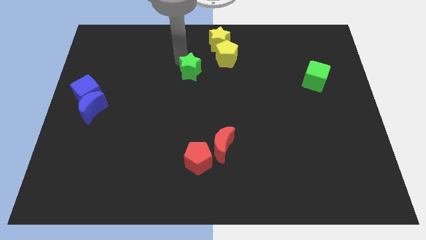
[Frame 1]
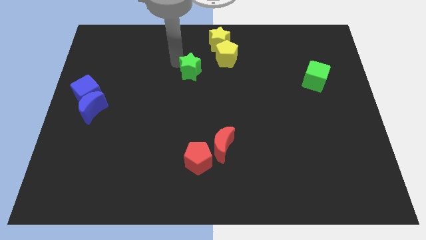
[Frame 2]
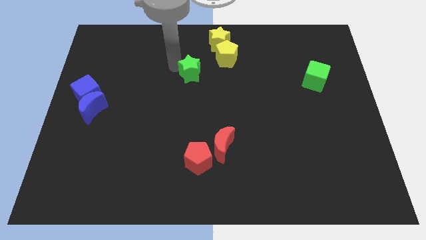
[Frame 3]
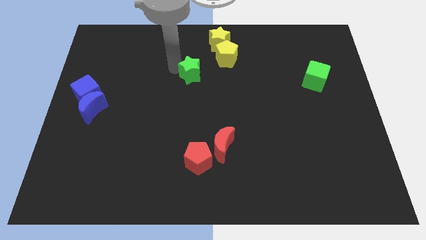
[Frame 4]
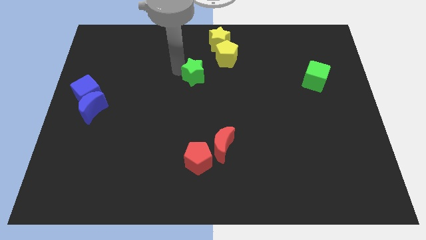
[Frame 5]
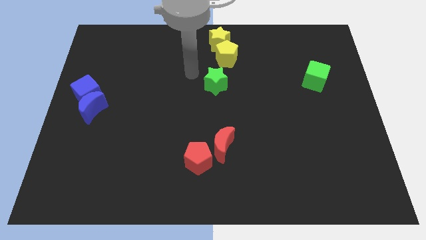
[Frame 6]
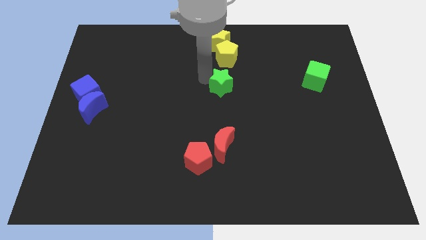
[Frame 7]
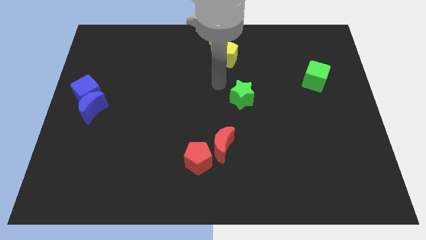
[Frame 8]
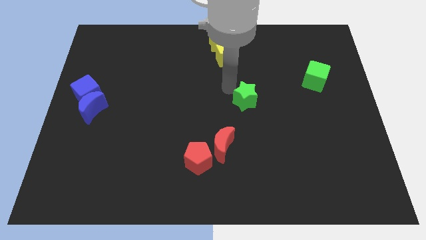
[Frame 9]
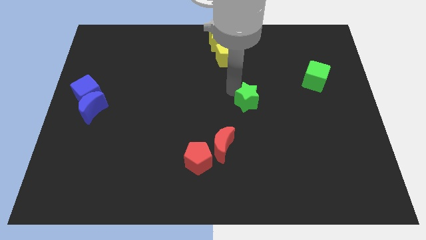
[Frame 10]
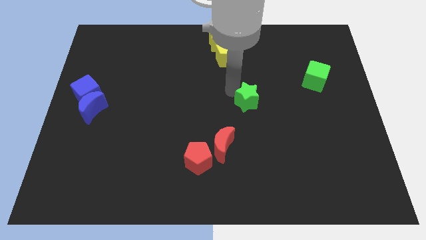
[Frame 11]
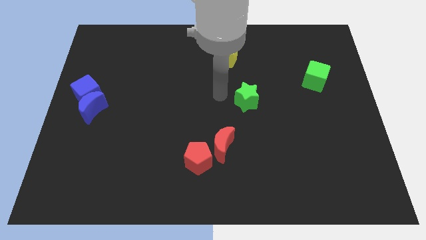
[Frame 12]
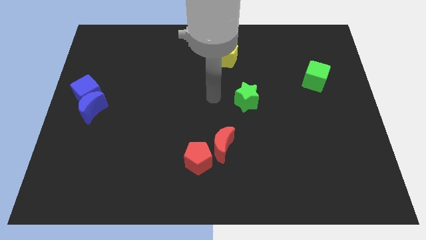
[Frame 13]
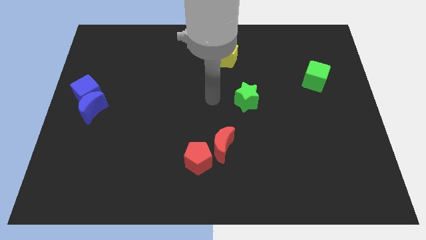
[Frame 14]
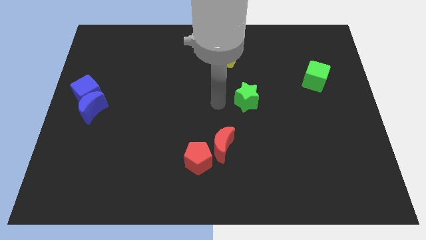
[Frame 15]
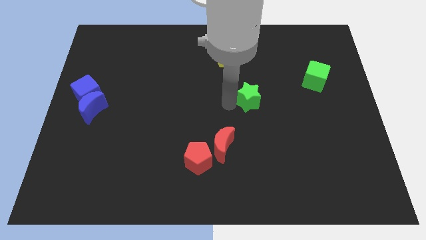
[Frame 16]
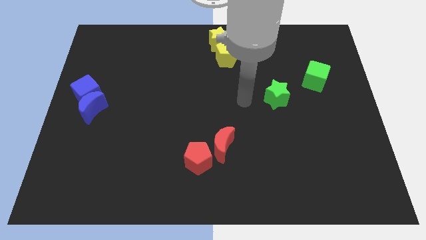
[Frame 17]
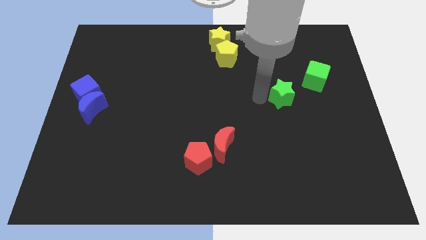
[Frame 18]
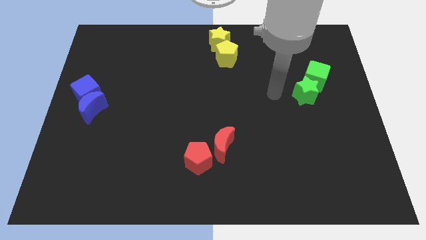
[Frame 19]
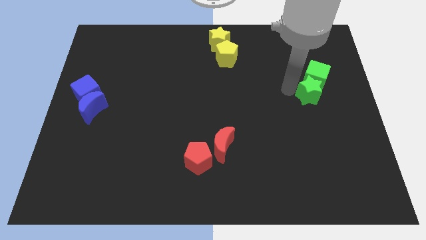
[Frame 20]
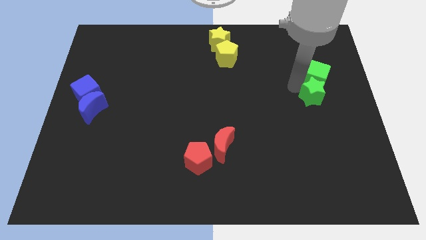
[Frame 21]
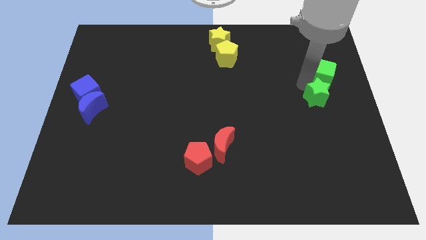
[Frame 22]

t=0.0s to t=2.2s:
push the green star under green cube

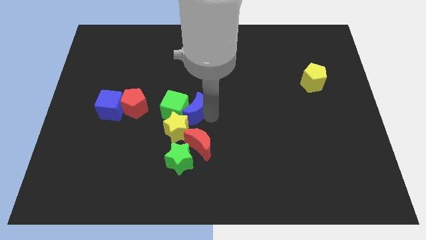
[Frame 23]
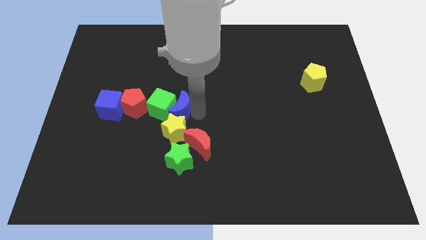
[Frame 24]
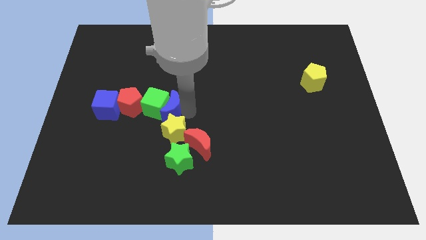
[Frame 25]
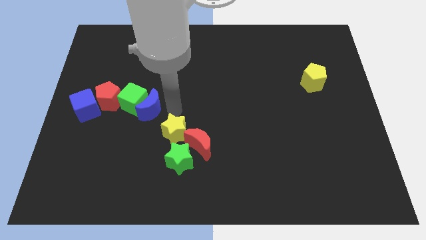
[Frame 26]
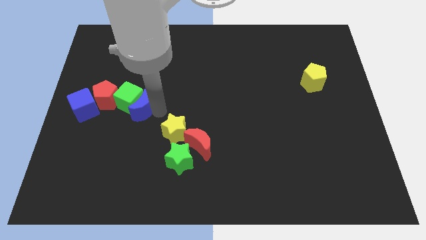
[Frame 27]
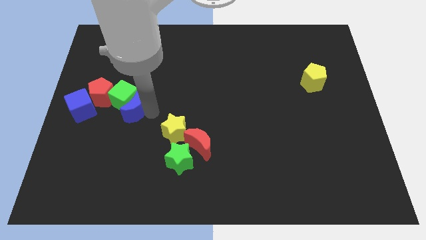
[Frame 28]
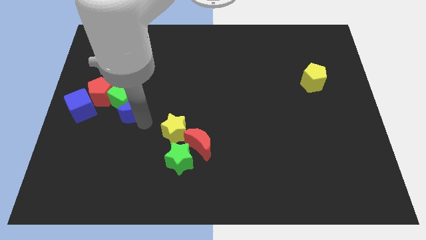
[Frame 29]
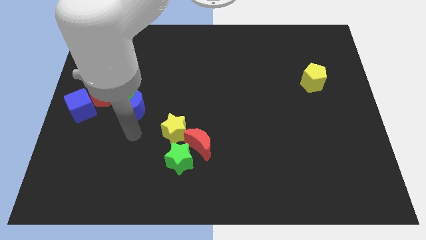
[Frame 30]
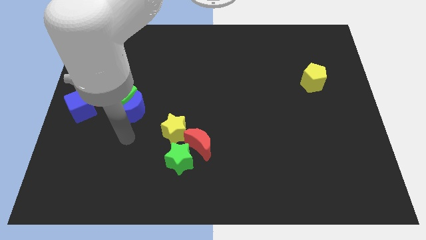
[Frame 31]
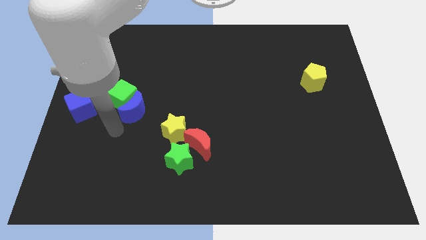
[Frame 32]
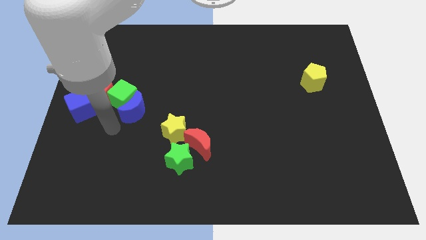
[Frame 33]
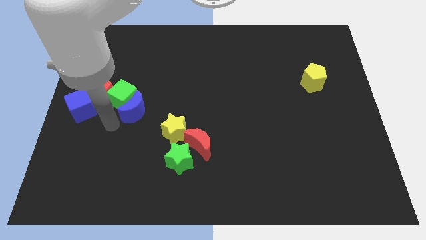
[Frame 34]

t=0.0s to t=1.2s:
push the group of blocks towards the left side of the board

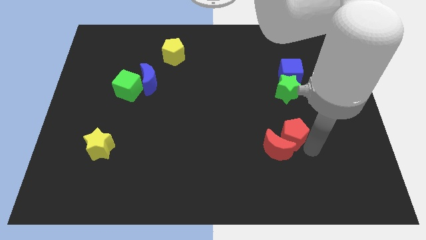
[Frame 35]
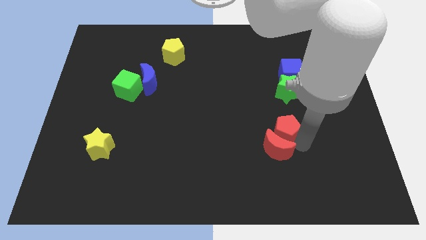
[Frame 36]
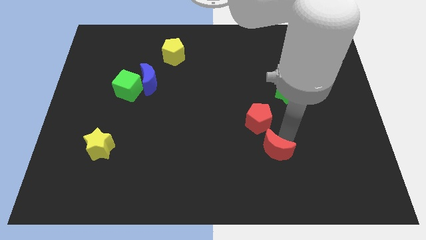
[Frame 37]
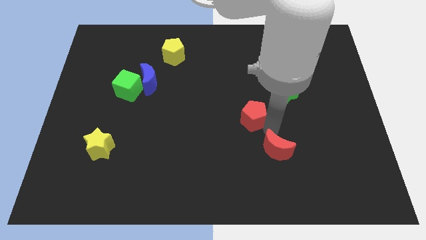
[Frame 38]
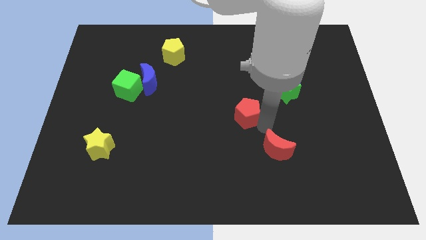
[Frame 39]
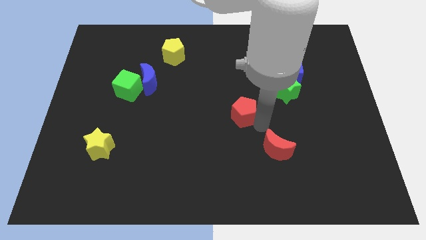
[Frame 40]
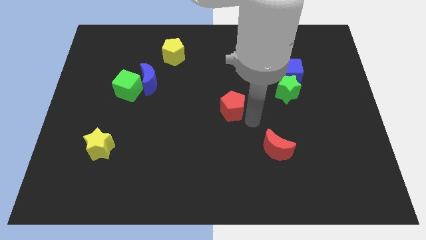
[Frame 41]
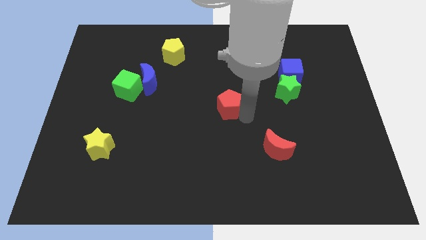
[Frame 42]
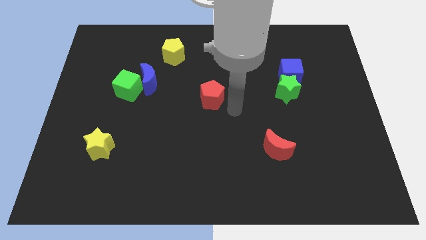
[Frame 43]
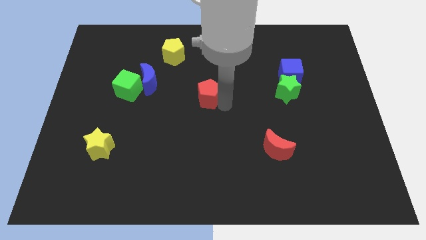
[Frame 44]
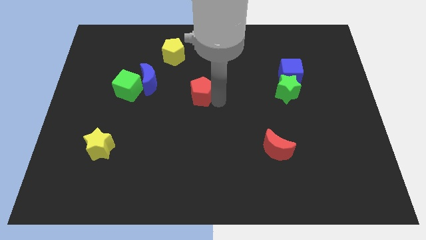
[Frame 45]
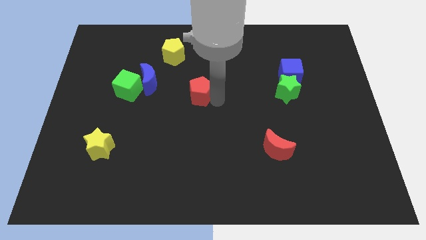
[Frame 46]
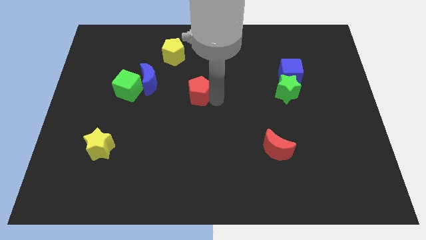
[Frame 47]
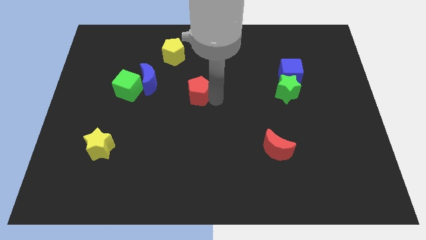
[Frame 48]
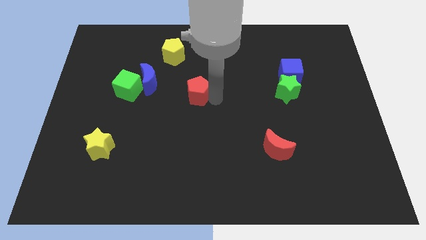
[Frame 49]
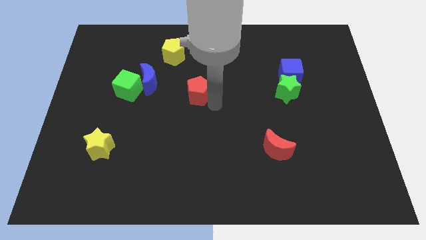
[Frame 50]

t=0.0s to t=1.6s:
push the red pentagon diagonal to the yellow pentagon

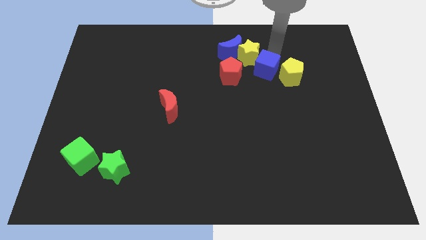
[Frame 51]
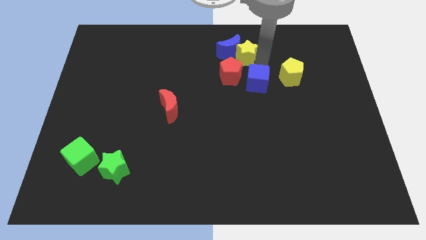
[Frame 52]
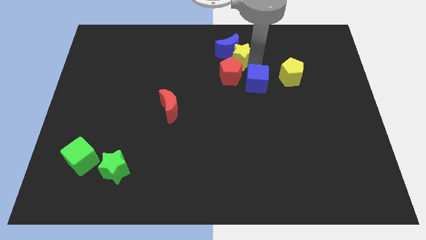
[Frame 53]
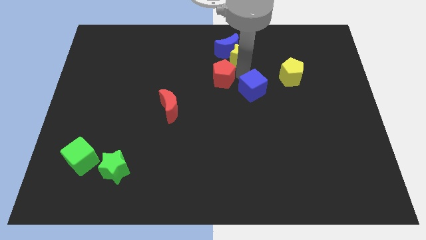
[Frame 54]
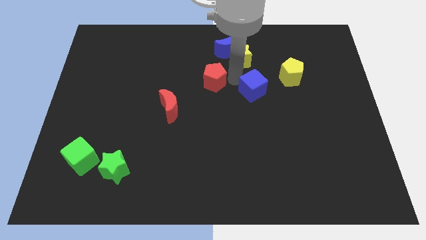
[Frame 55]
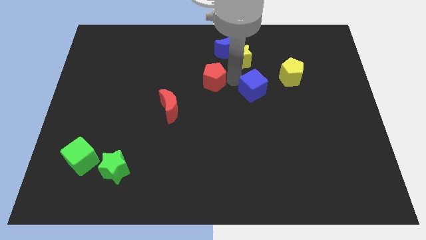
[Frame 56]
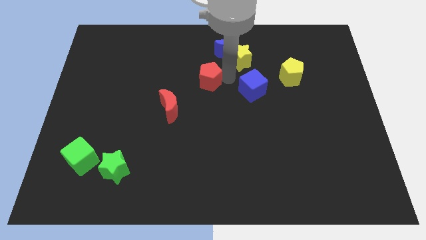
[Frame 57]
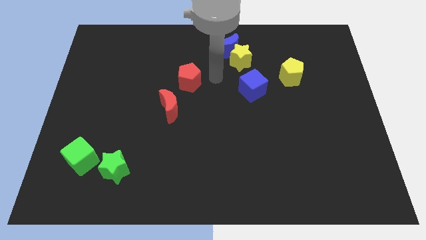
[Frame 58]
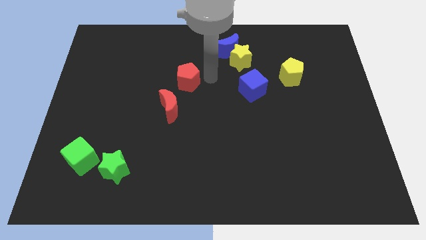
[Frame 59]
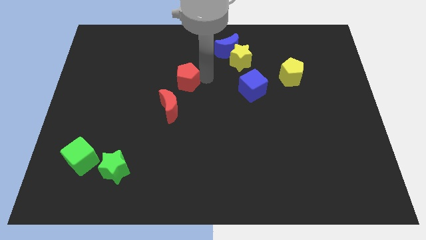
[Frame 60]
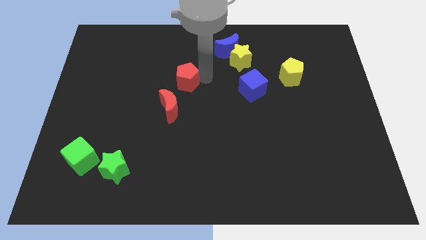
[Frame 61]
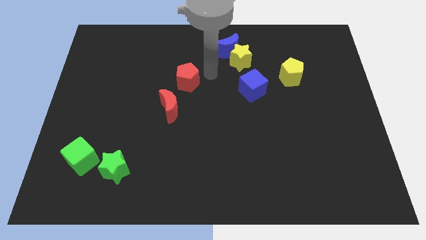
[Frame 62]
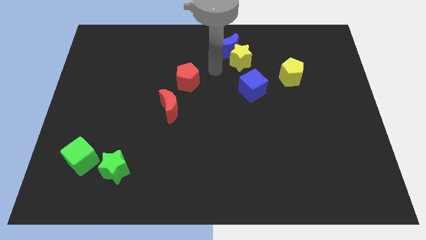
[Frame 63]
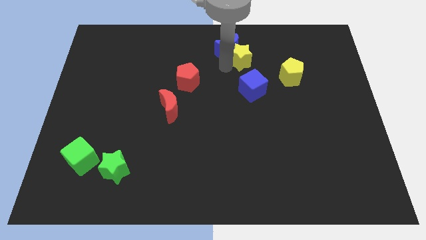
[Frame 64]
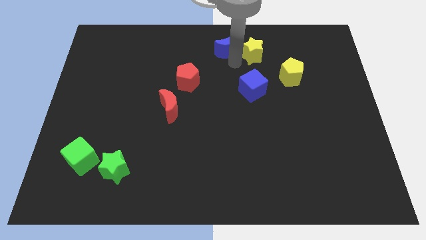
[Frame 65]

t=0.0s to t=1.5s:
place the red pentagon to top right of the red crescent

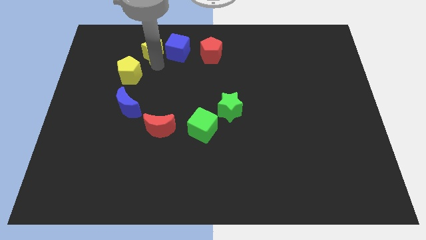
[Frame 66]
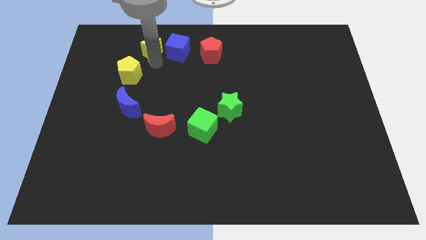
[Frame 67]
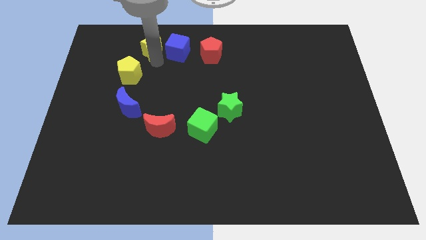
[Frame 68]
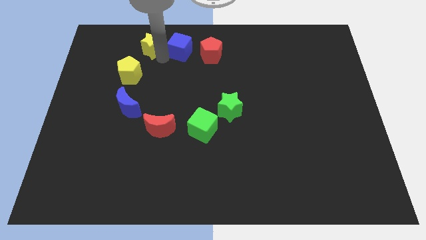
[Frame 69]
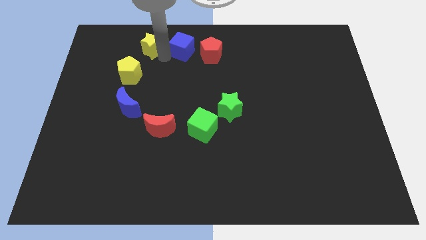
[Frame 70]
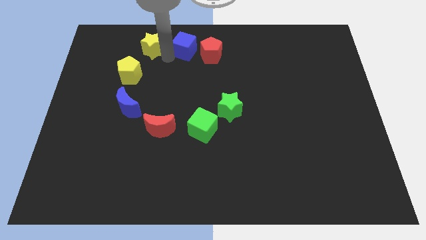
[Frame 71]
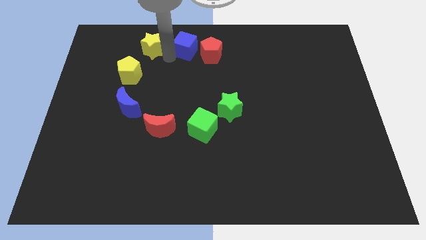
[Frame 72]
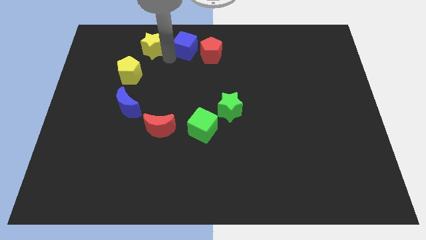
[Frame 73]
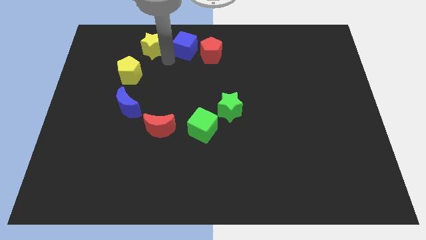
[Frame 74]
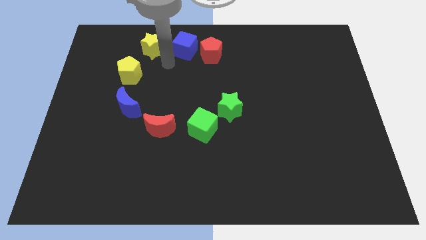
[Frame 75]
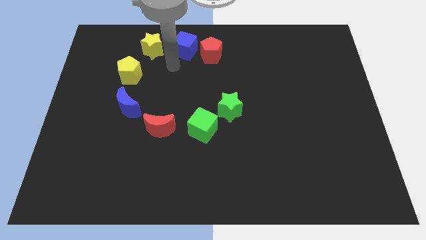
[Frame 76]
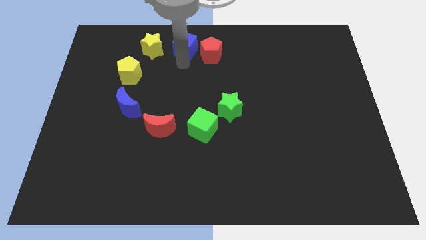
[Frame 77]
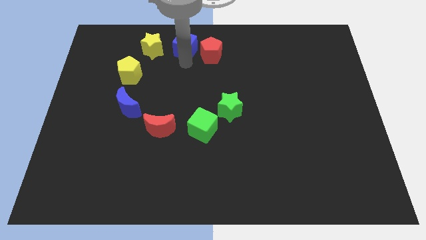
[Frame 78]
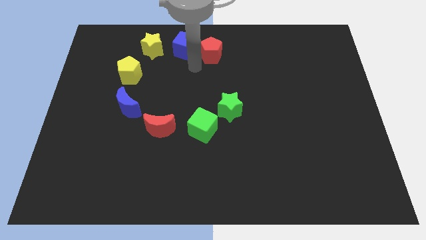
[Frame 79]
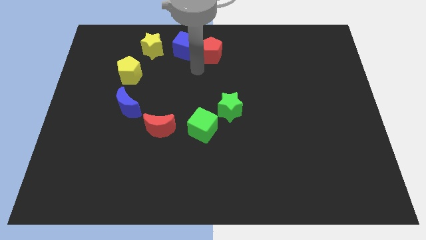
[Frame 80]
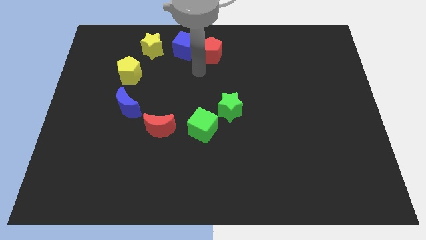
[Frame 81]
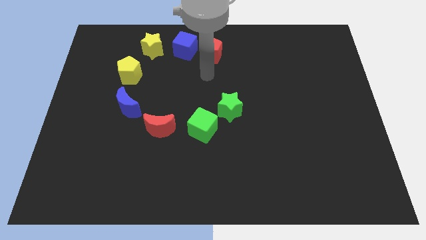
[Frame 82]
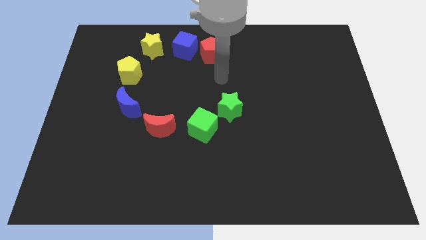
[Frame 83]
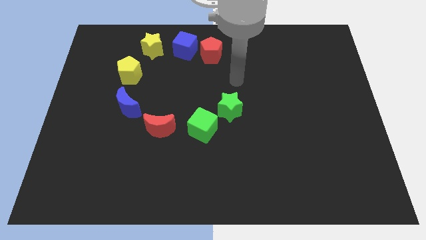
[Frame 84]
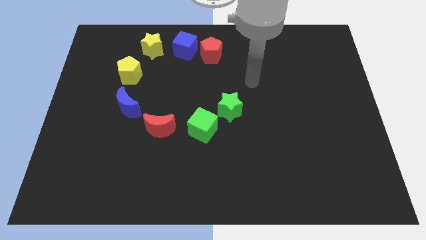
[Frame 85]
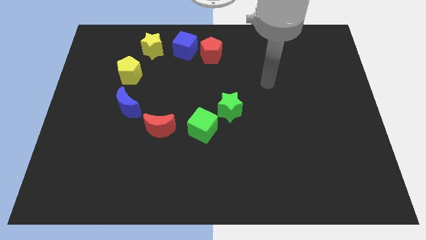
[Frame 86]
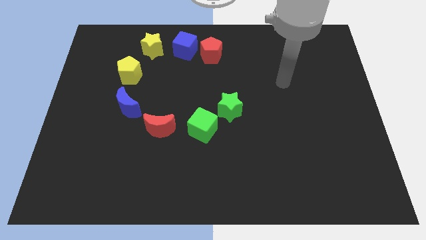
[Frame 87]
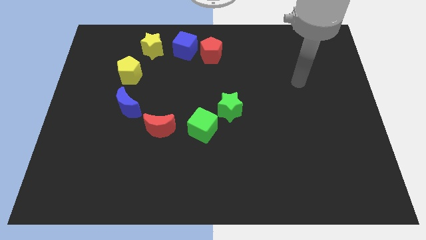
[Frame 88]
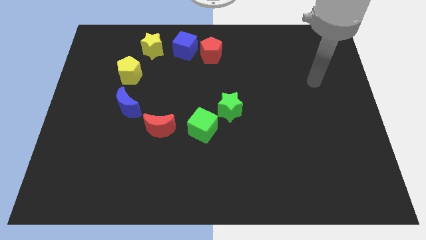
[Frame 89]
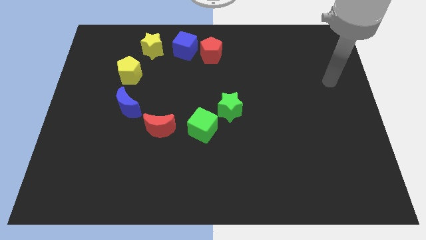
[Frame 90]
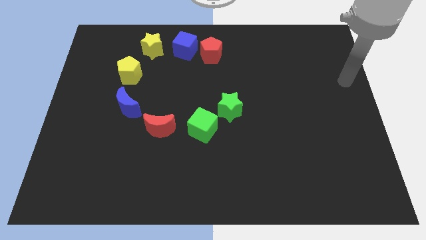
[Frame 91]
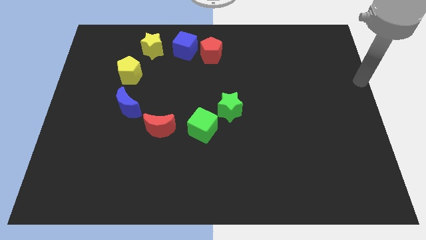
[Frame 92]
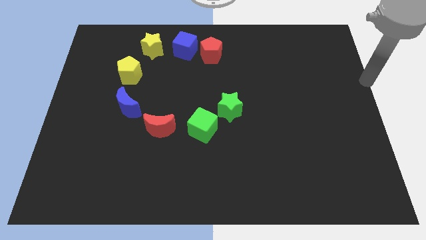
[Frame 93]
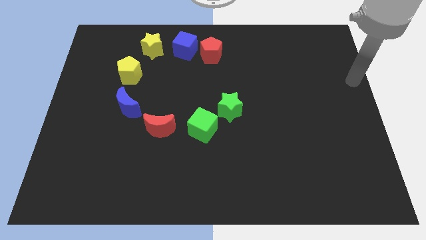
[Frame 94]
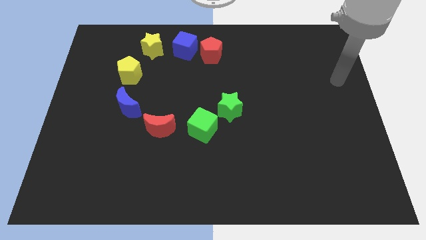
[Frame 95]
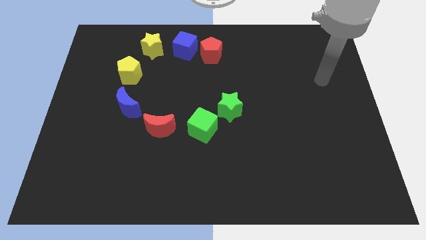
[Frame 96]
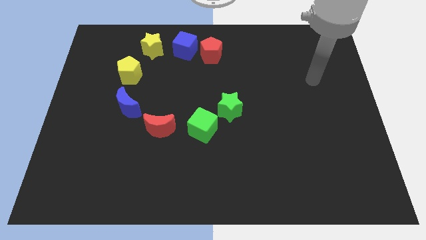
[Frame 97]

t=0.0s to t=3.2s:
move the arm slightly towards the center right
